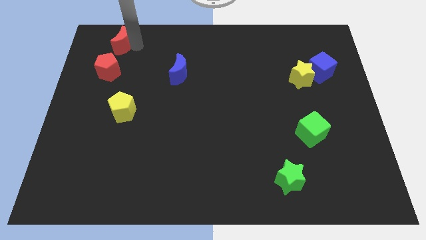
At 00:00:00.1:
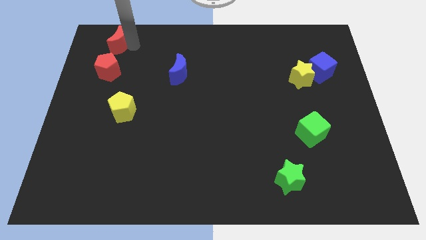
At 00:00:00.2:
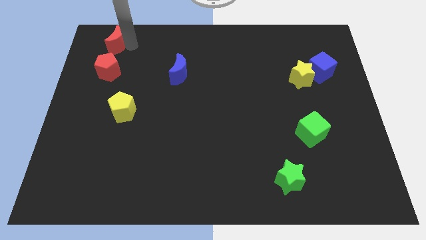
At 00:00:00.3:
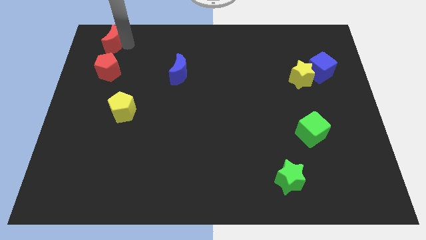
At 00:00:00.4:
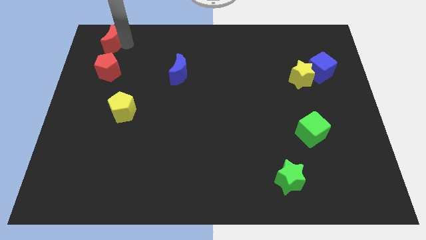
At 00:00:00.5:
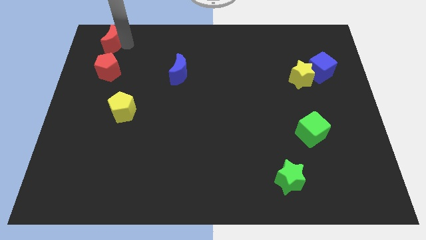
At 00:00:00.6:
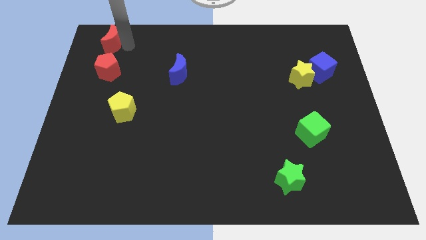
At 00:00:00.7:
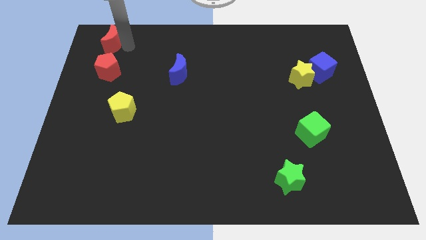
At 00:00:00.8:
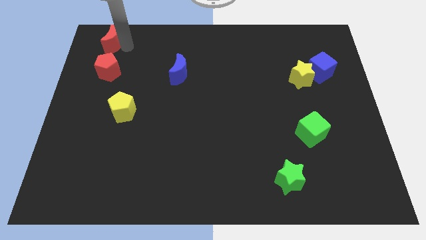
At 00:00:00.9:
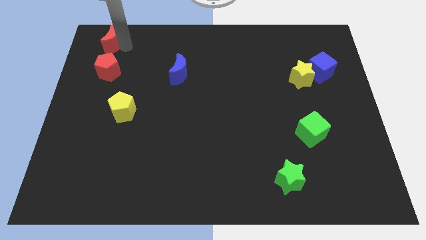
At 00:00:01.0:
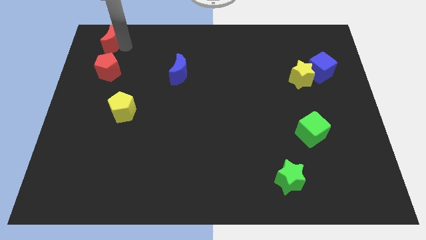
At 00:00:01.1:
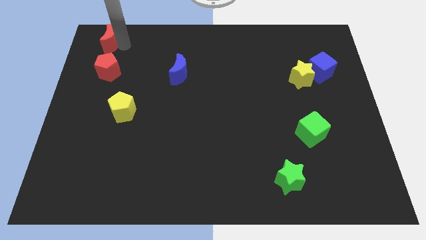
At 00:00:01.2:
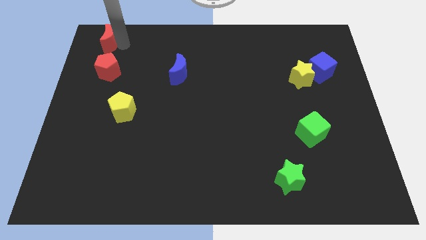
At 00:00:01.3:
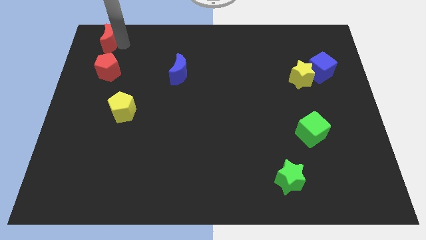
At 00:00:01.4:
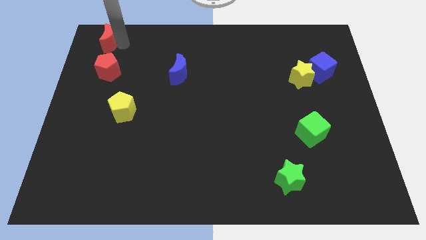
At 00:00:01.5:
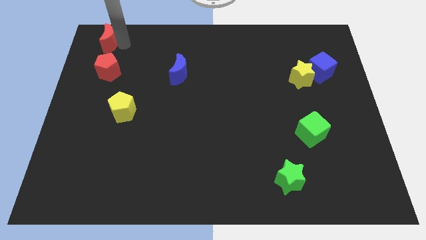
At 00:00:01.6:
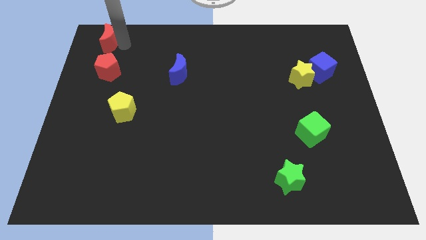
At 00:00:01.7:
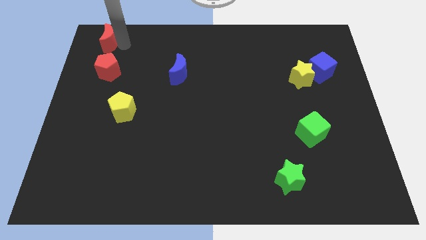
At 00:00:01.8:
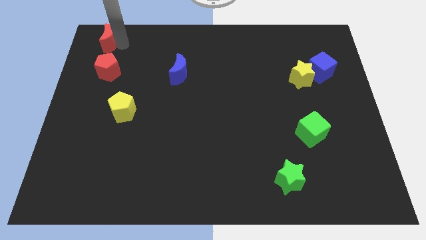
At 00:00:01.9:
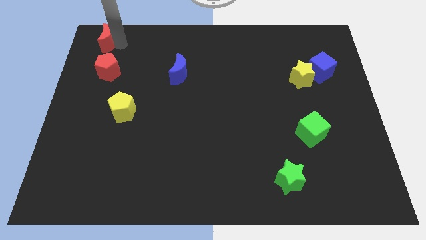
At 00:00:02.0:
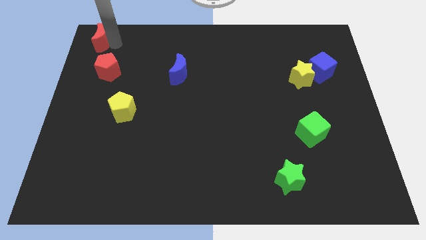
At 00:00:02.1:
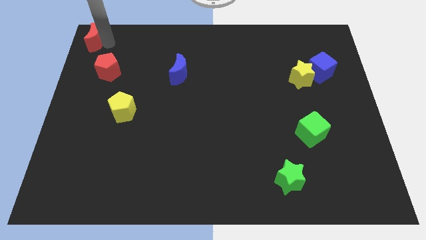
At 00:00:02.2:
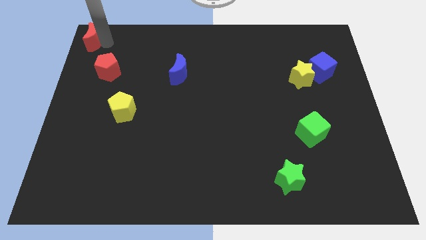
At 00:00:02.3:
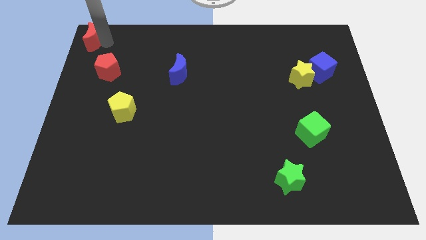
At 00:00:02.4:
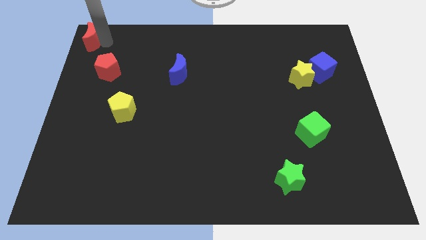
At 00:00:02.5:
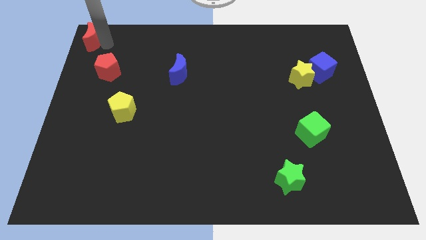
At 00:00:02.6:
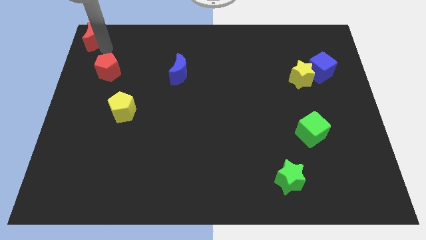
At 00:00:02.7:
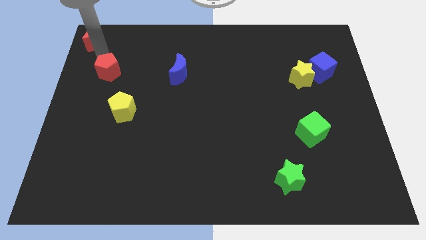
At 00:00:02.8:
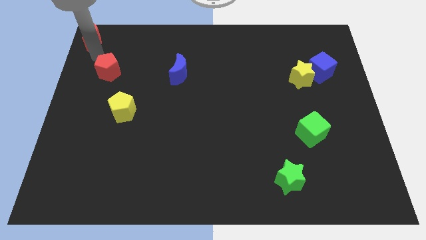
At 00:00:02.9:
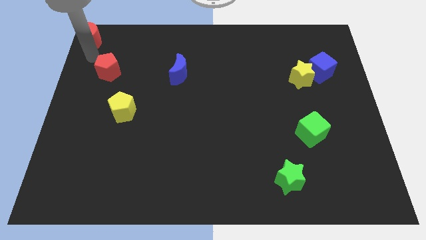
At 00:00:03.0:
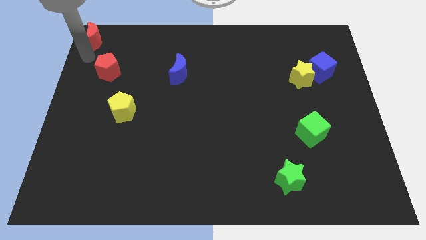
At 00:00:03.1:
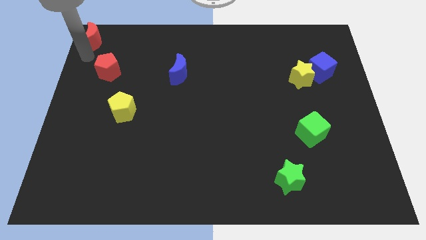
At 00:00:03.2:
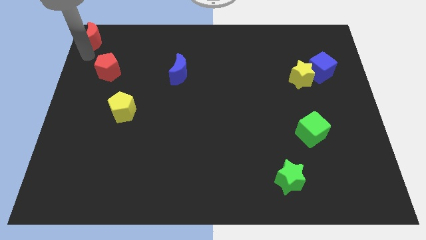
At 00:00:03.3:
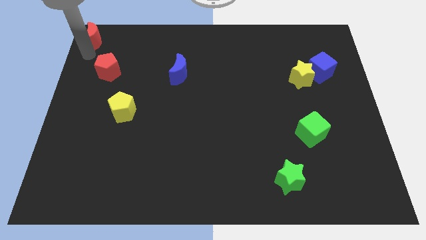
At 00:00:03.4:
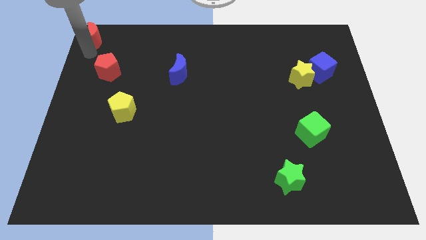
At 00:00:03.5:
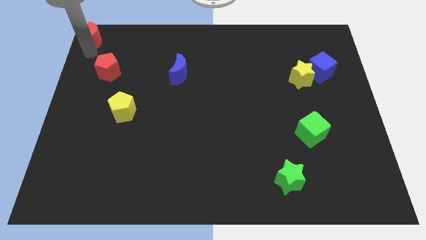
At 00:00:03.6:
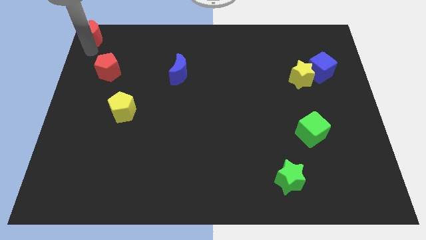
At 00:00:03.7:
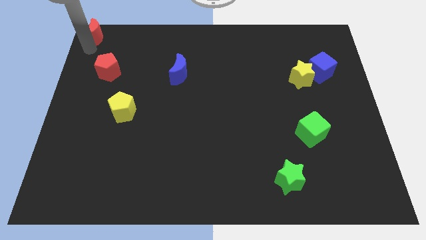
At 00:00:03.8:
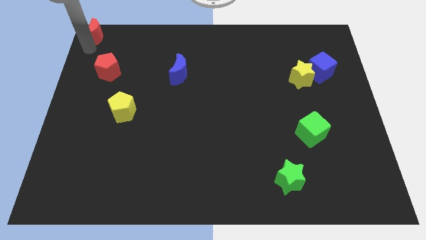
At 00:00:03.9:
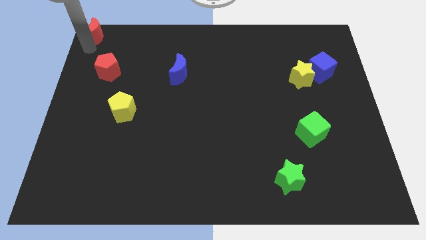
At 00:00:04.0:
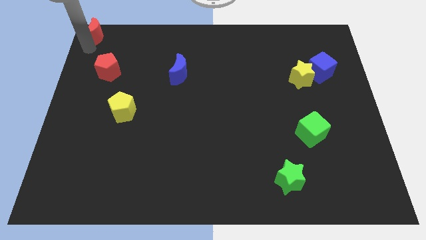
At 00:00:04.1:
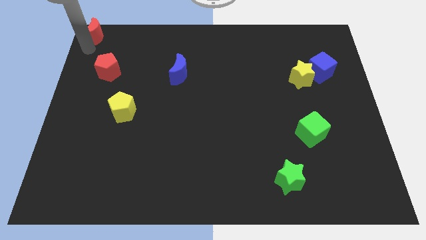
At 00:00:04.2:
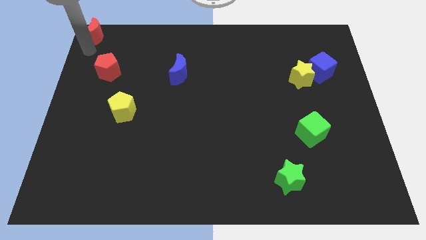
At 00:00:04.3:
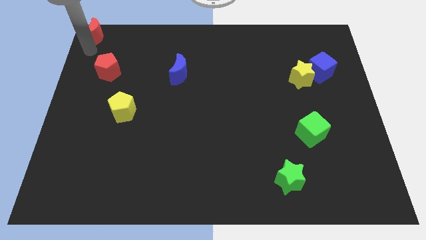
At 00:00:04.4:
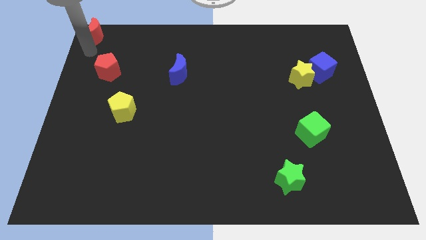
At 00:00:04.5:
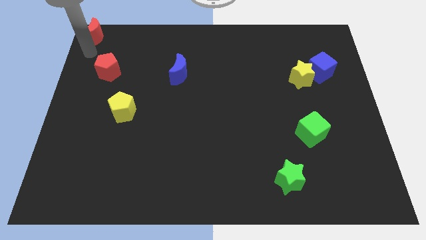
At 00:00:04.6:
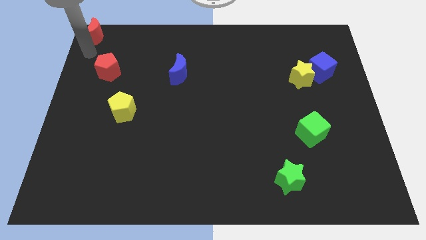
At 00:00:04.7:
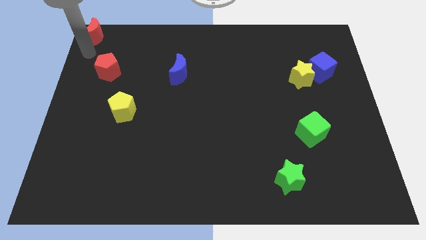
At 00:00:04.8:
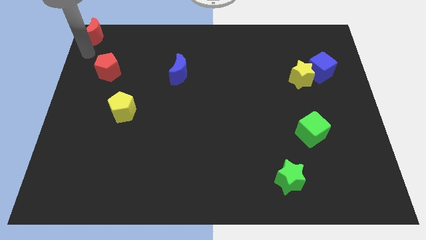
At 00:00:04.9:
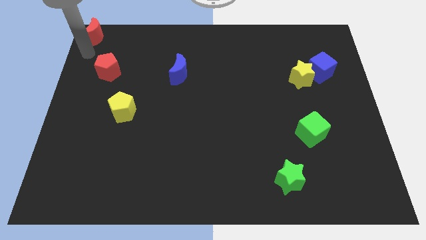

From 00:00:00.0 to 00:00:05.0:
place the red moon at the top left corner of the board

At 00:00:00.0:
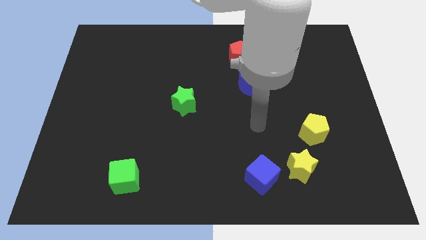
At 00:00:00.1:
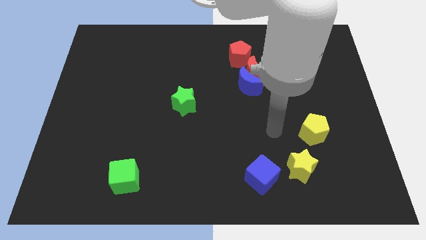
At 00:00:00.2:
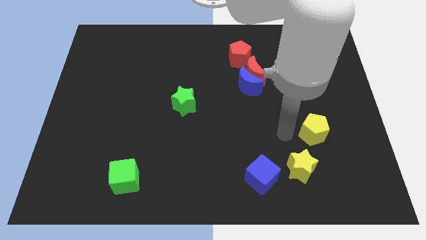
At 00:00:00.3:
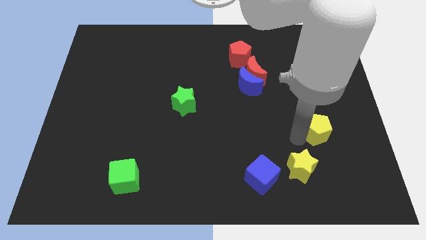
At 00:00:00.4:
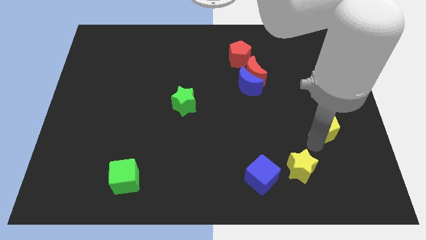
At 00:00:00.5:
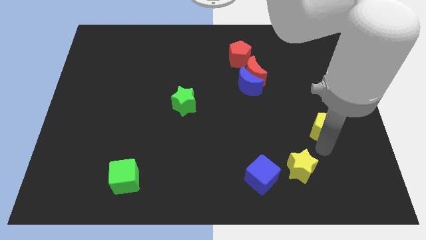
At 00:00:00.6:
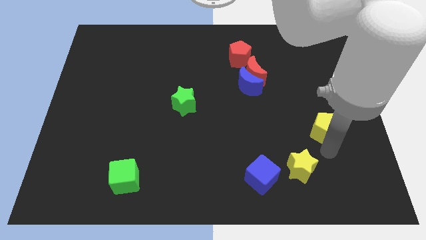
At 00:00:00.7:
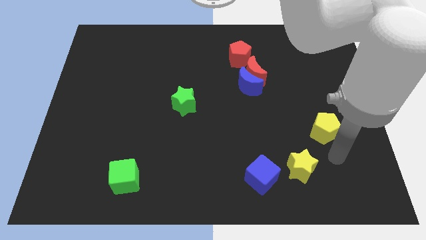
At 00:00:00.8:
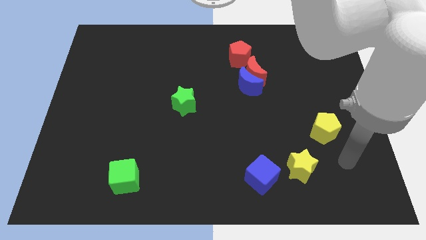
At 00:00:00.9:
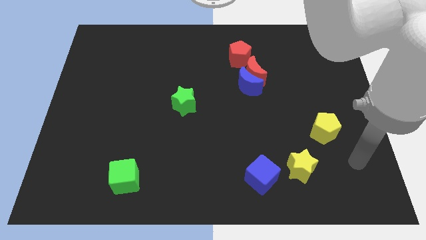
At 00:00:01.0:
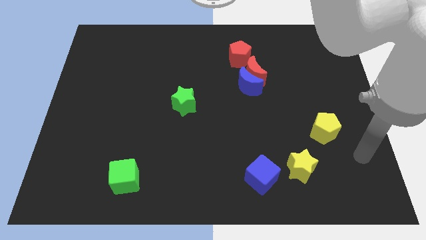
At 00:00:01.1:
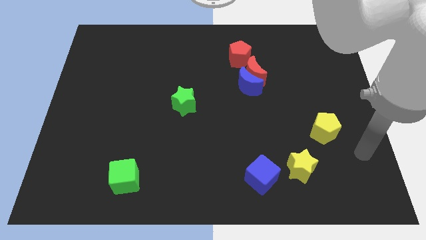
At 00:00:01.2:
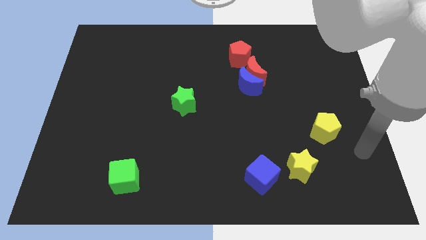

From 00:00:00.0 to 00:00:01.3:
move the yellow pentagon slightly

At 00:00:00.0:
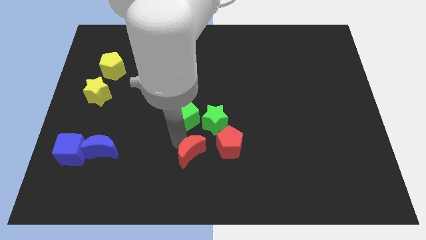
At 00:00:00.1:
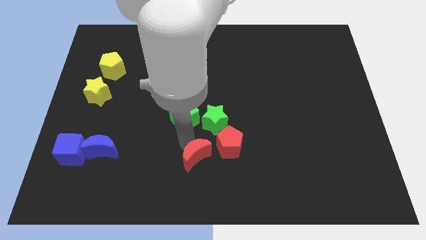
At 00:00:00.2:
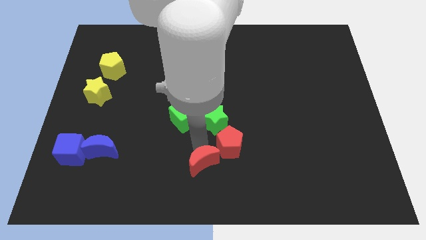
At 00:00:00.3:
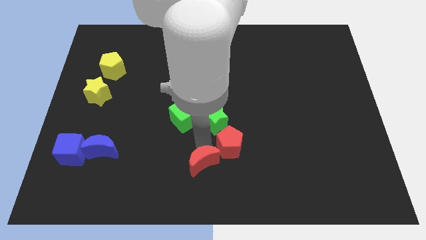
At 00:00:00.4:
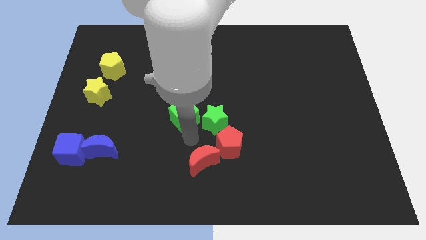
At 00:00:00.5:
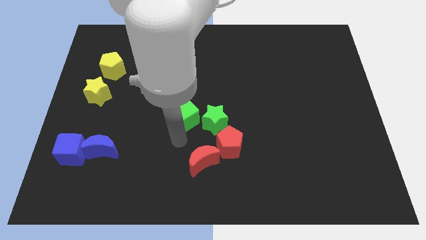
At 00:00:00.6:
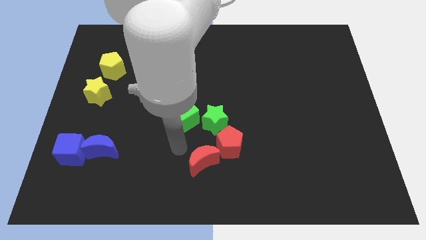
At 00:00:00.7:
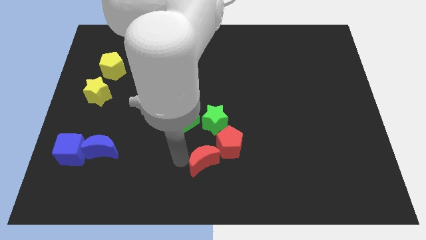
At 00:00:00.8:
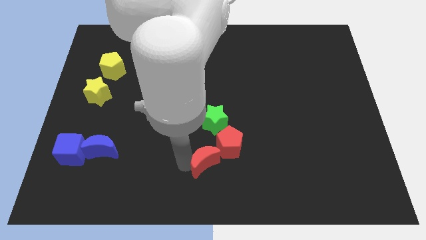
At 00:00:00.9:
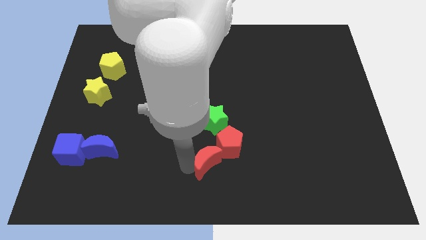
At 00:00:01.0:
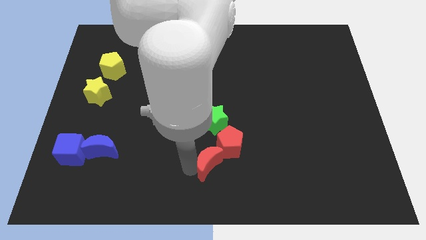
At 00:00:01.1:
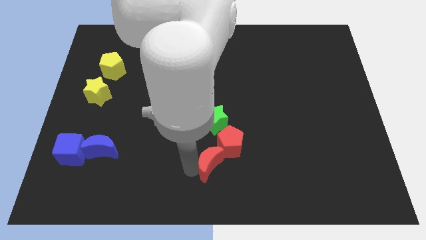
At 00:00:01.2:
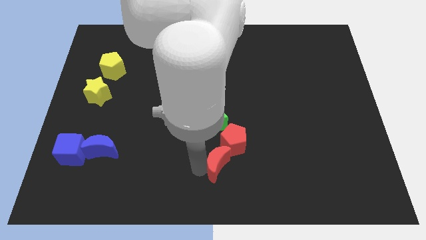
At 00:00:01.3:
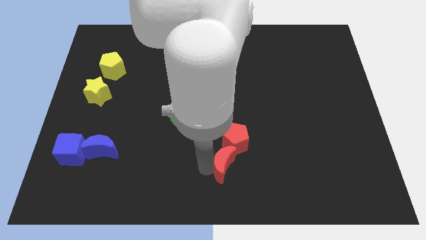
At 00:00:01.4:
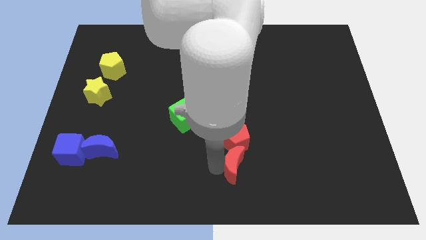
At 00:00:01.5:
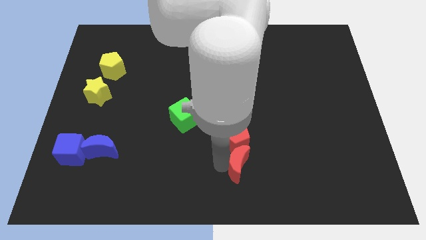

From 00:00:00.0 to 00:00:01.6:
move the red moon to the bottom right of red pentagon

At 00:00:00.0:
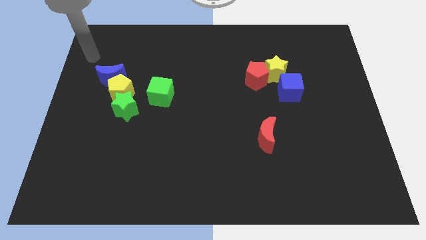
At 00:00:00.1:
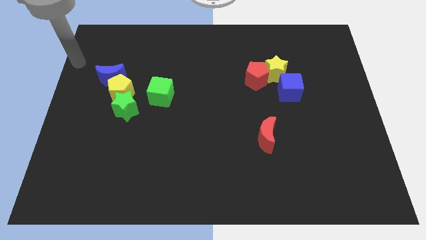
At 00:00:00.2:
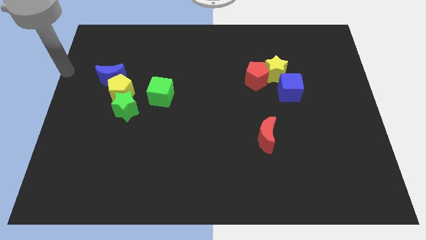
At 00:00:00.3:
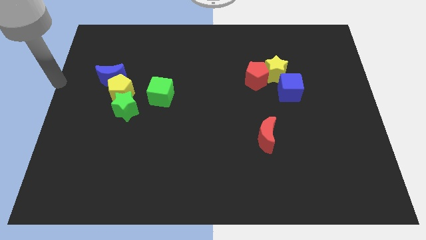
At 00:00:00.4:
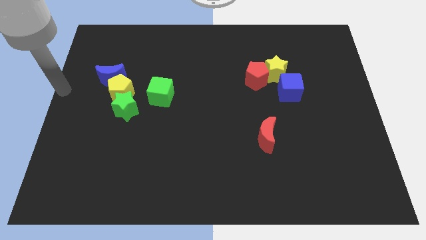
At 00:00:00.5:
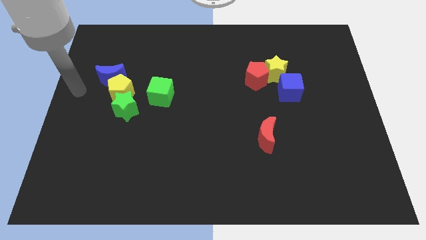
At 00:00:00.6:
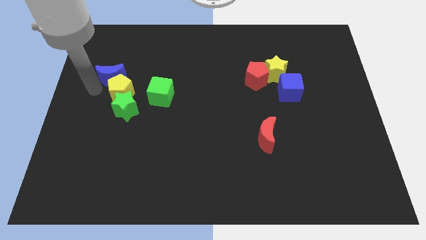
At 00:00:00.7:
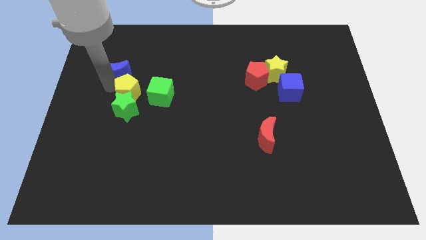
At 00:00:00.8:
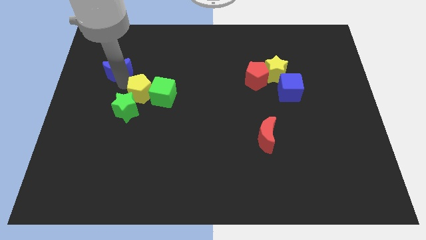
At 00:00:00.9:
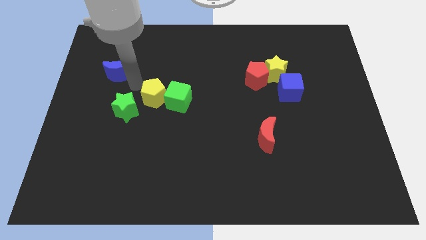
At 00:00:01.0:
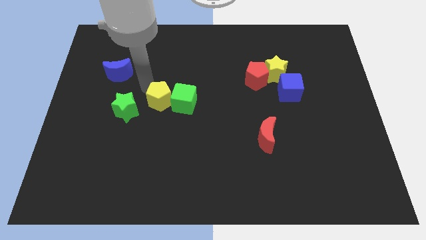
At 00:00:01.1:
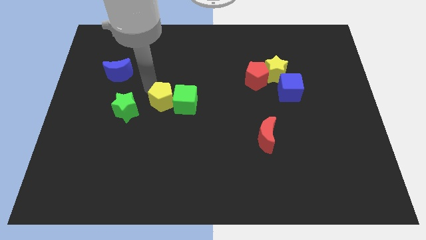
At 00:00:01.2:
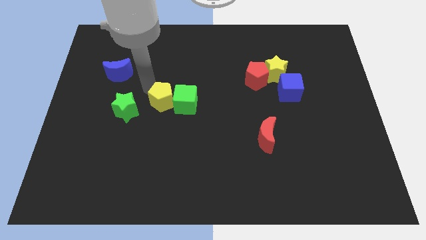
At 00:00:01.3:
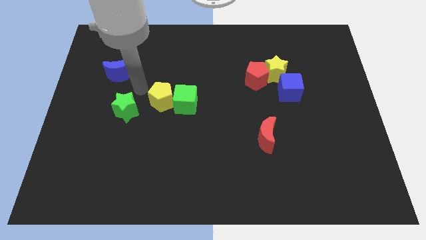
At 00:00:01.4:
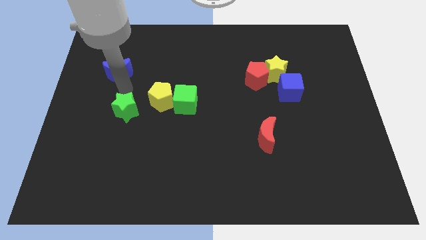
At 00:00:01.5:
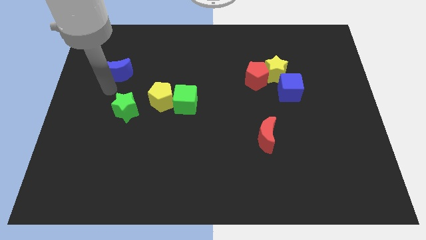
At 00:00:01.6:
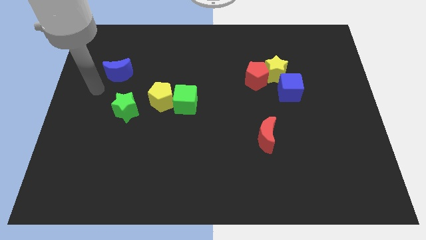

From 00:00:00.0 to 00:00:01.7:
slide the yellow pentagon into the left of the green cube
